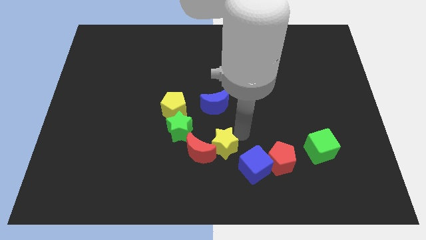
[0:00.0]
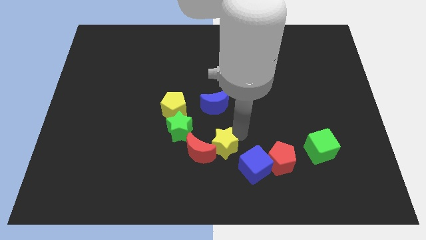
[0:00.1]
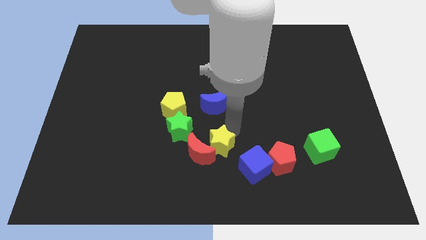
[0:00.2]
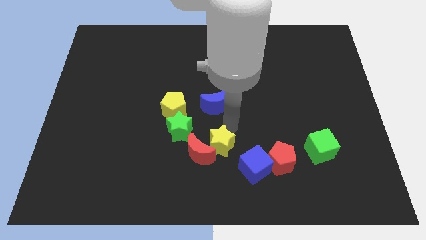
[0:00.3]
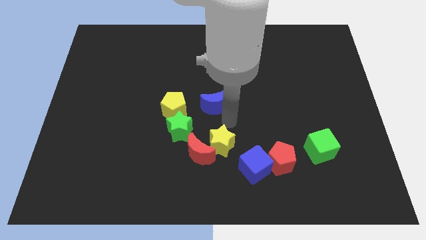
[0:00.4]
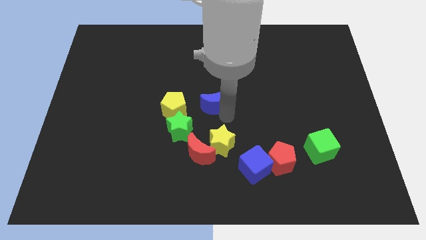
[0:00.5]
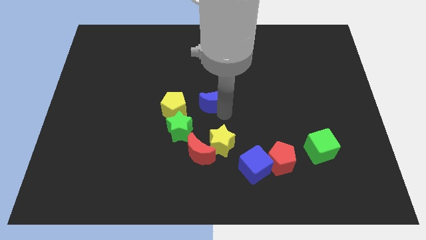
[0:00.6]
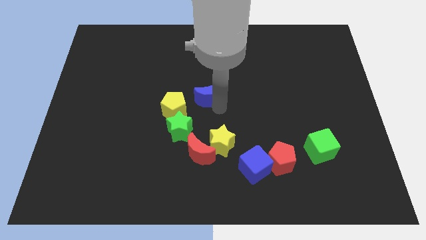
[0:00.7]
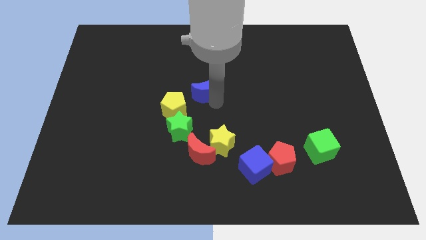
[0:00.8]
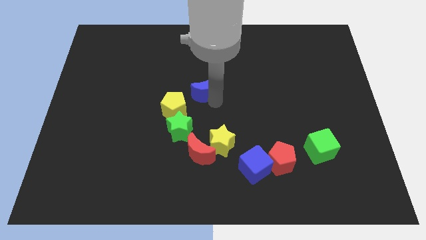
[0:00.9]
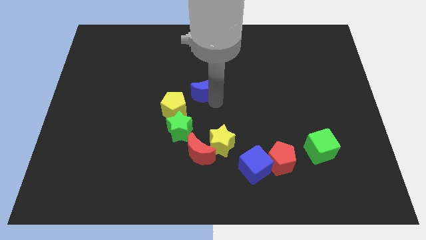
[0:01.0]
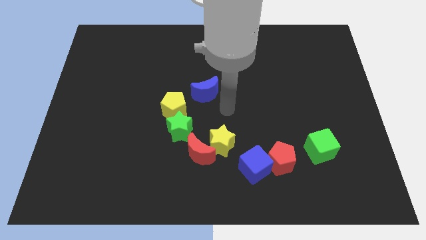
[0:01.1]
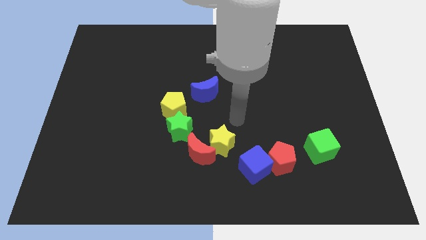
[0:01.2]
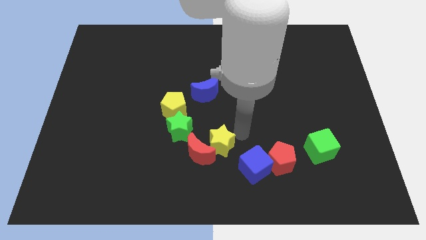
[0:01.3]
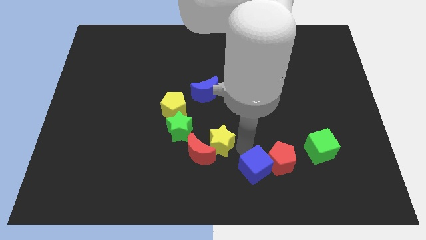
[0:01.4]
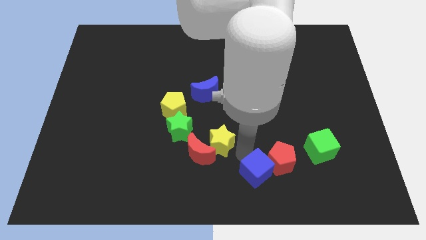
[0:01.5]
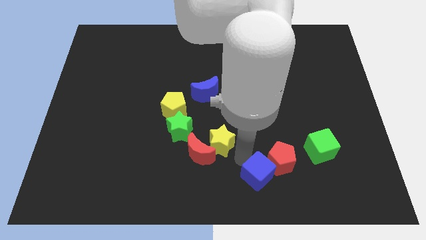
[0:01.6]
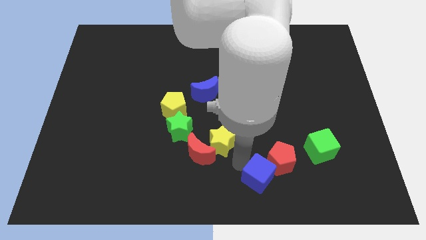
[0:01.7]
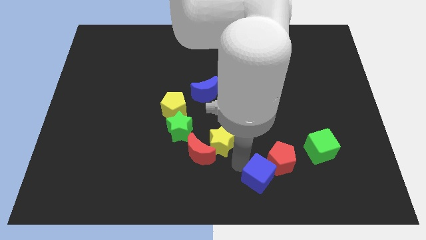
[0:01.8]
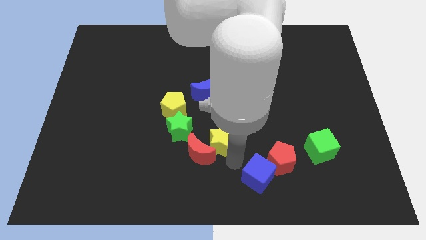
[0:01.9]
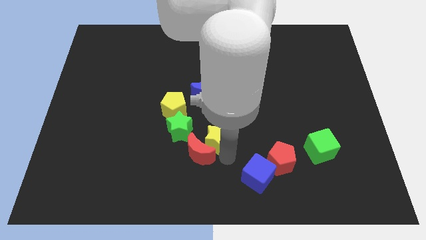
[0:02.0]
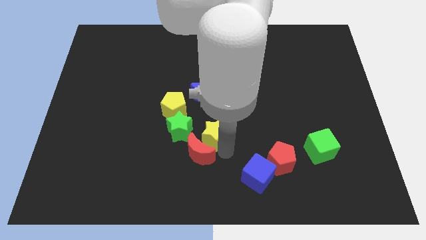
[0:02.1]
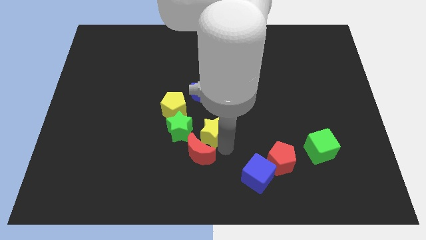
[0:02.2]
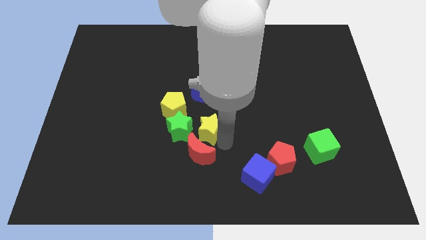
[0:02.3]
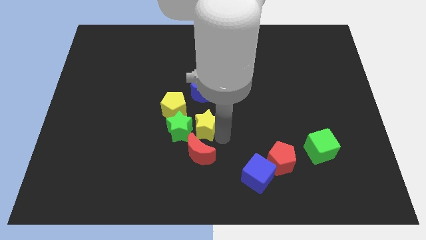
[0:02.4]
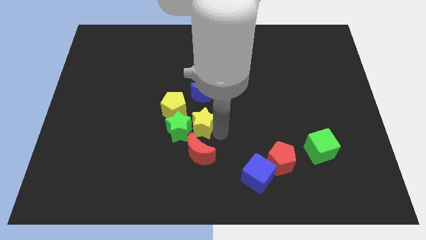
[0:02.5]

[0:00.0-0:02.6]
slightly move the blue moon up

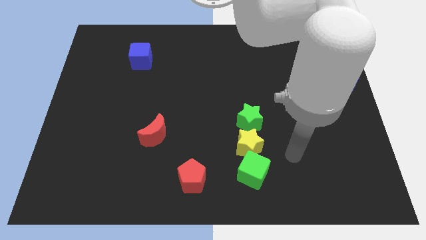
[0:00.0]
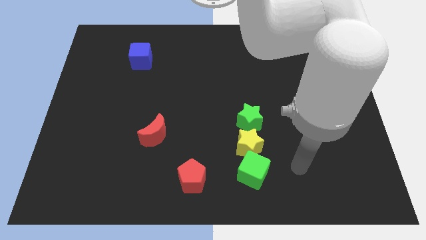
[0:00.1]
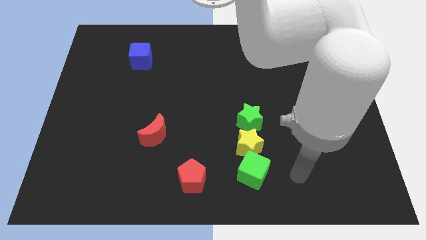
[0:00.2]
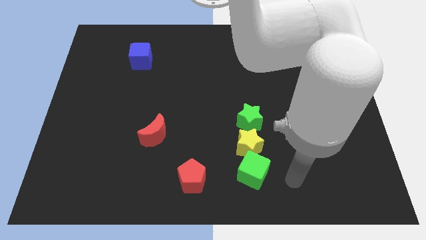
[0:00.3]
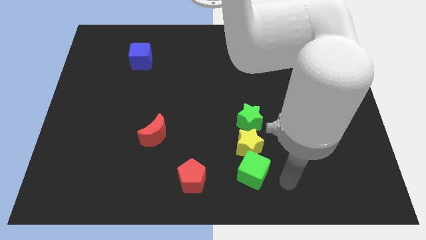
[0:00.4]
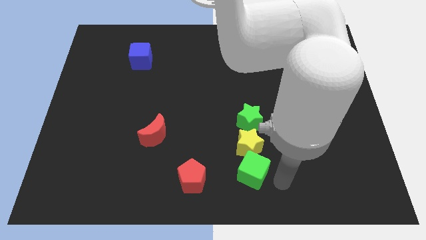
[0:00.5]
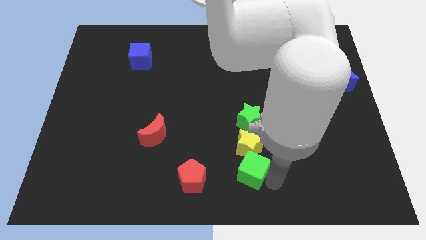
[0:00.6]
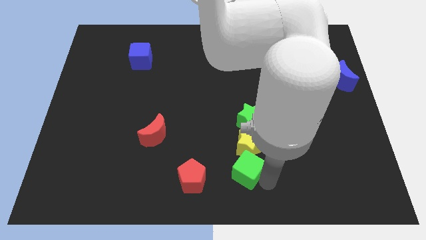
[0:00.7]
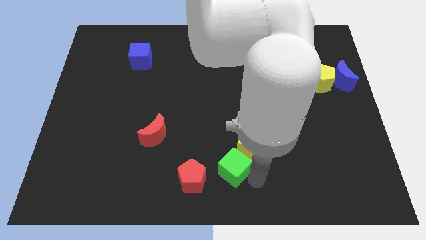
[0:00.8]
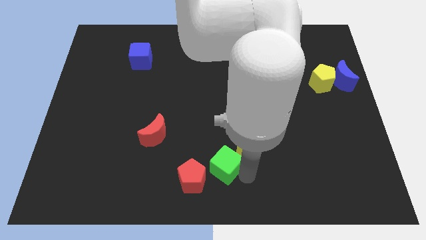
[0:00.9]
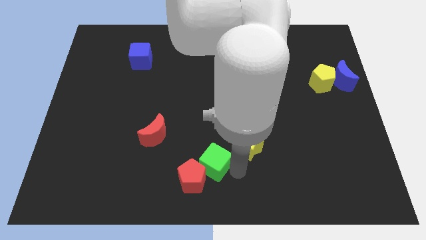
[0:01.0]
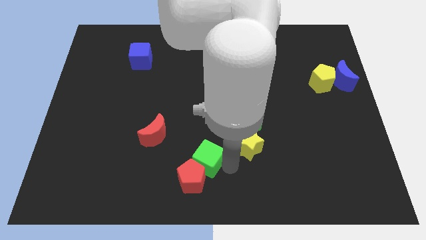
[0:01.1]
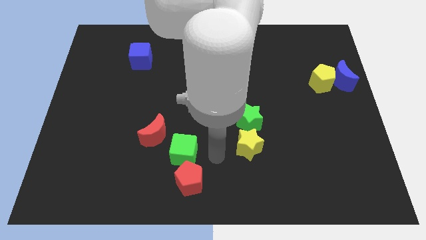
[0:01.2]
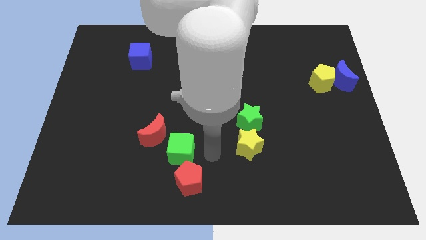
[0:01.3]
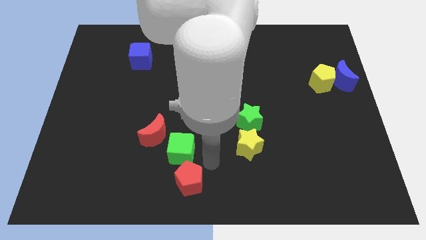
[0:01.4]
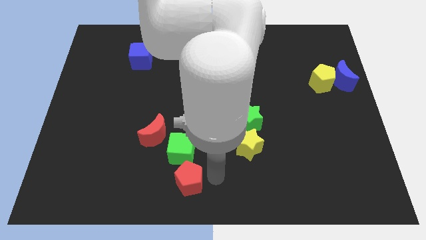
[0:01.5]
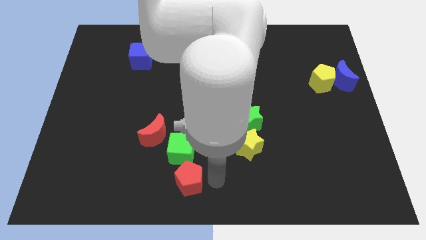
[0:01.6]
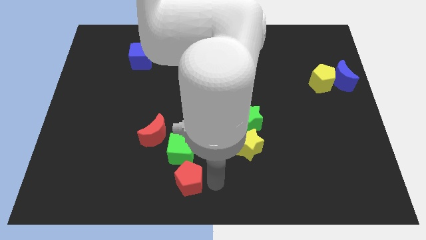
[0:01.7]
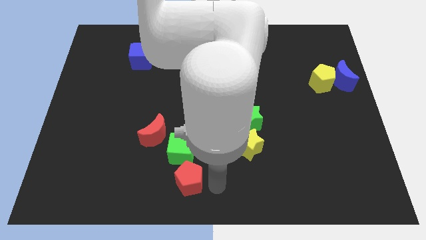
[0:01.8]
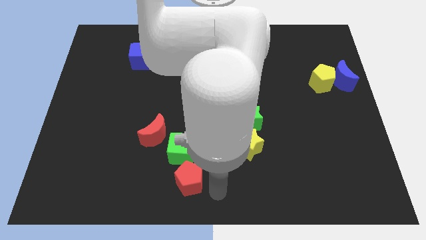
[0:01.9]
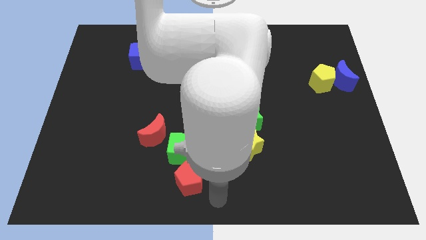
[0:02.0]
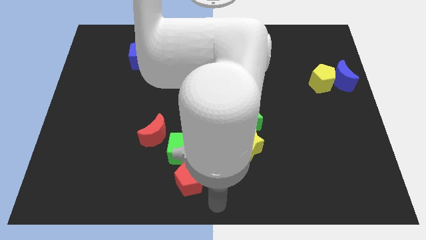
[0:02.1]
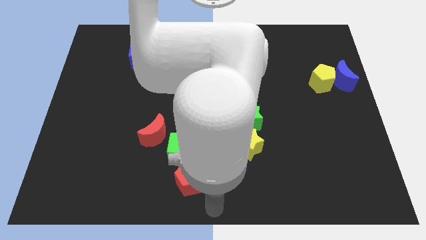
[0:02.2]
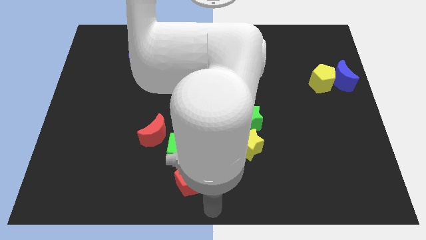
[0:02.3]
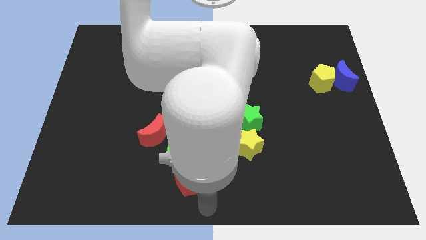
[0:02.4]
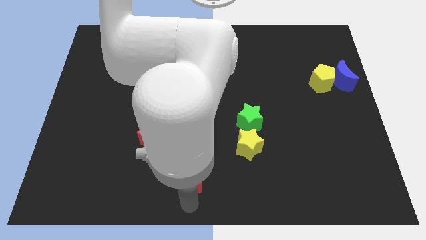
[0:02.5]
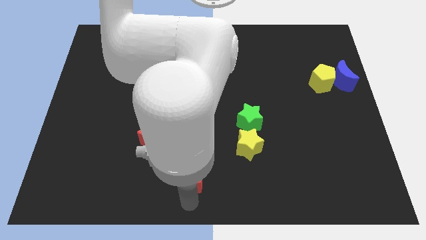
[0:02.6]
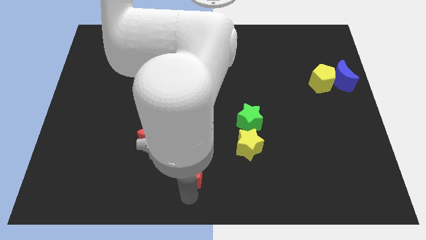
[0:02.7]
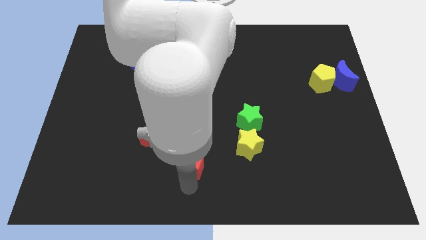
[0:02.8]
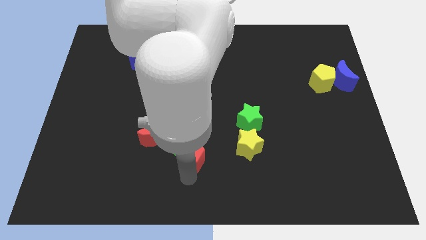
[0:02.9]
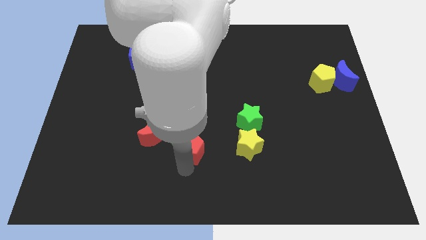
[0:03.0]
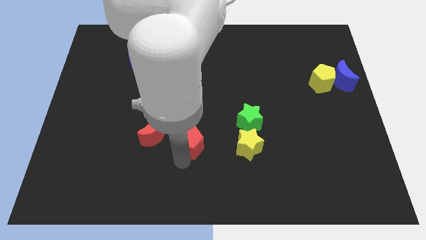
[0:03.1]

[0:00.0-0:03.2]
move the green cube and the red pentagon slightly up

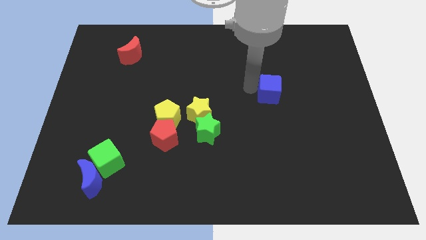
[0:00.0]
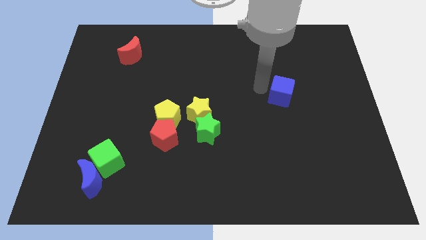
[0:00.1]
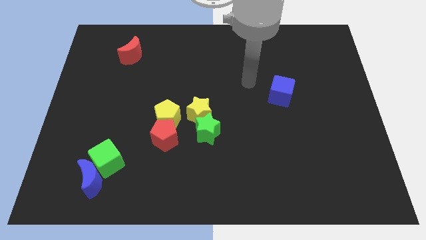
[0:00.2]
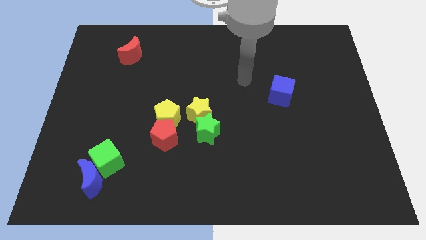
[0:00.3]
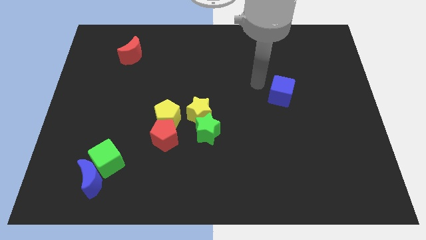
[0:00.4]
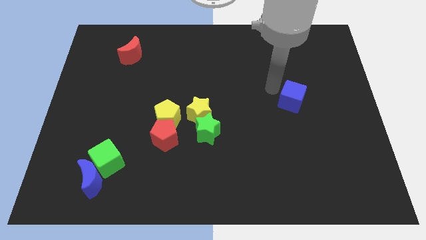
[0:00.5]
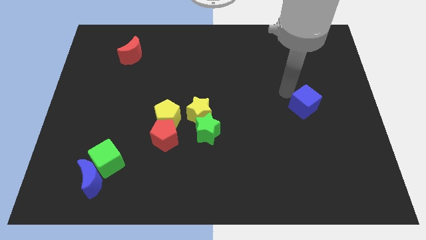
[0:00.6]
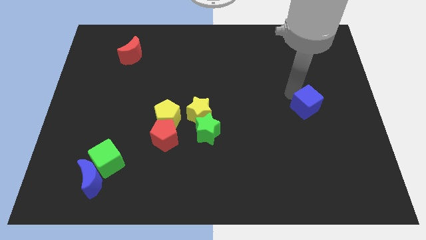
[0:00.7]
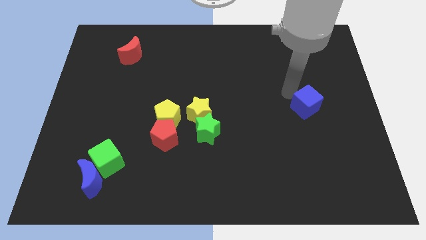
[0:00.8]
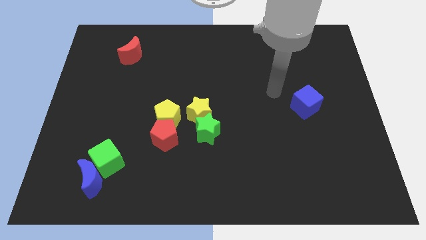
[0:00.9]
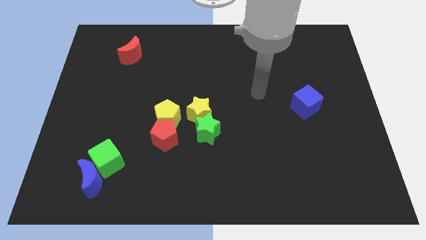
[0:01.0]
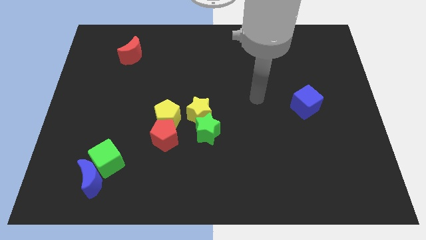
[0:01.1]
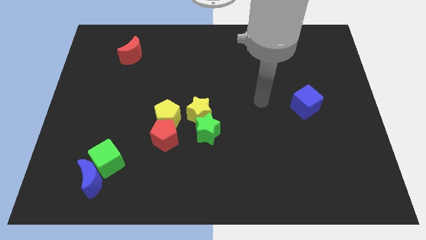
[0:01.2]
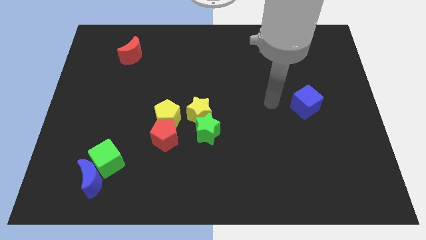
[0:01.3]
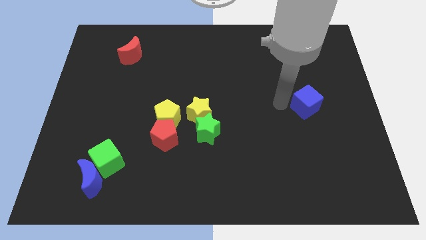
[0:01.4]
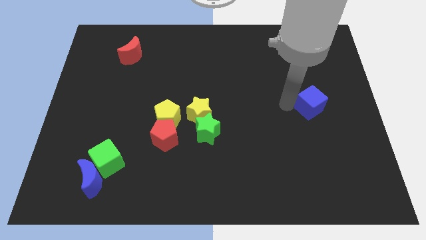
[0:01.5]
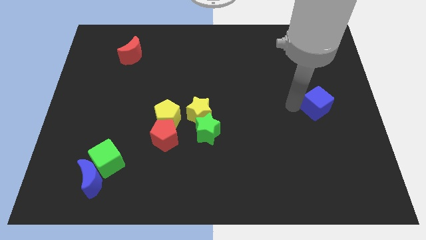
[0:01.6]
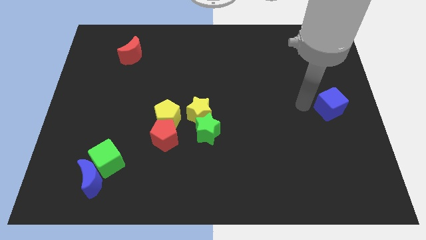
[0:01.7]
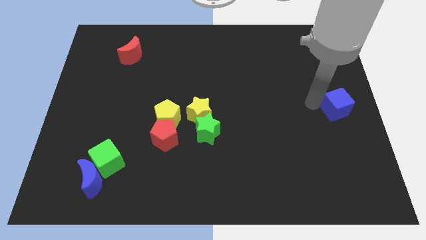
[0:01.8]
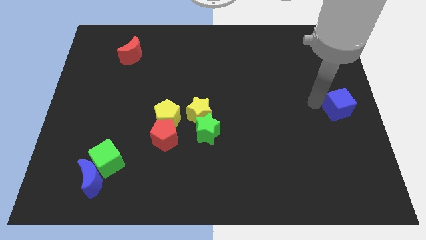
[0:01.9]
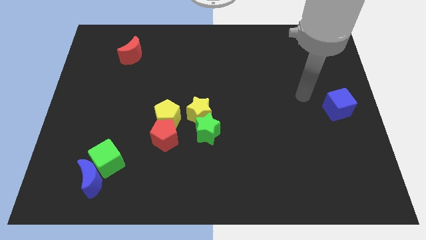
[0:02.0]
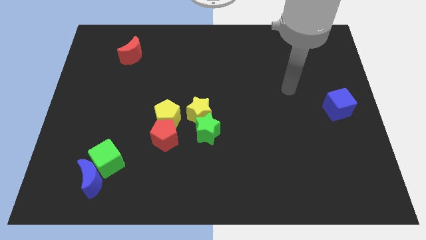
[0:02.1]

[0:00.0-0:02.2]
push the blue cube towards the right center of the board

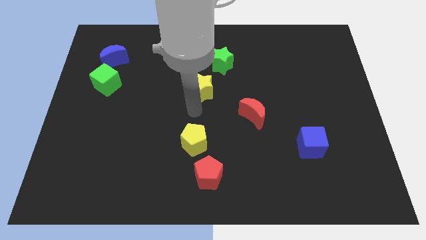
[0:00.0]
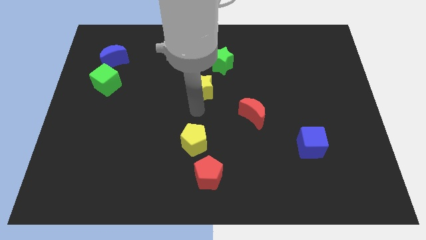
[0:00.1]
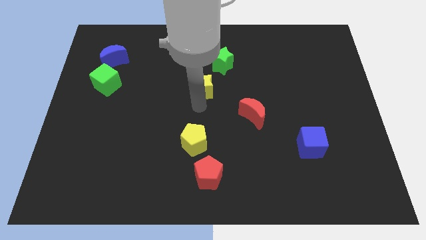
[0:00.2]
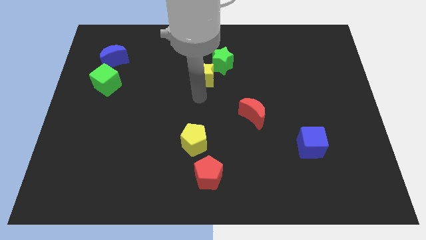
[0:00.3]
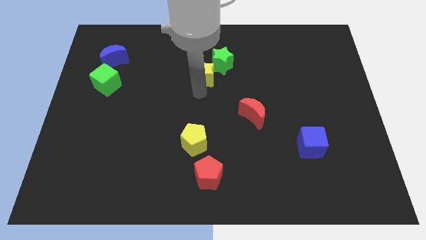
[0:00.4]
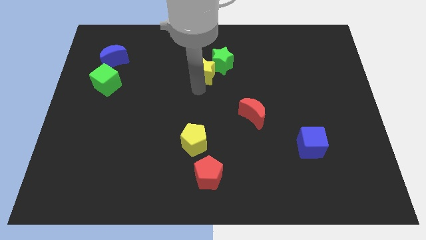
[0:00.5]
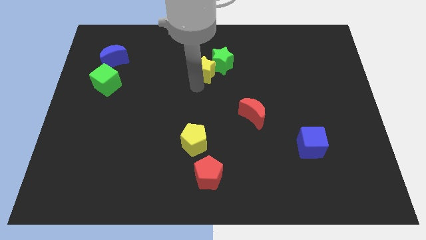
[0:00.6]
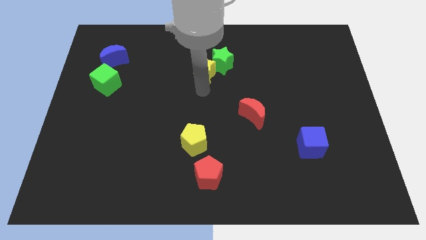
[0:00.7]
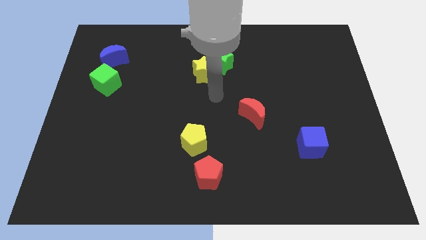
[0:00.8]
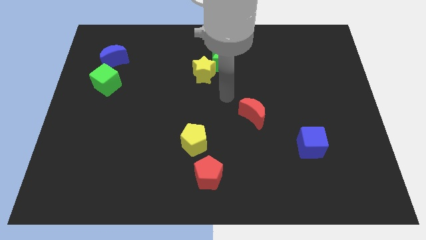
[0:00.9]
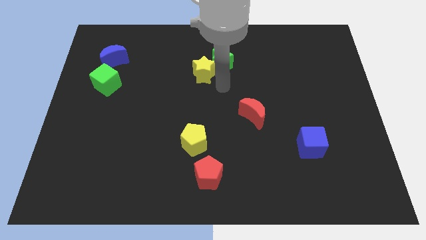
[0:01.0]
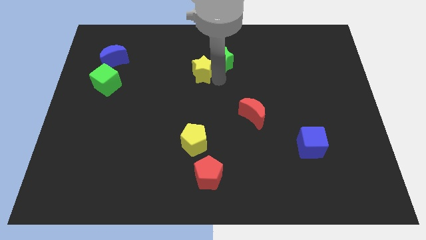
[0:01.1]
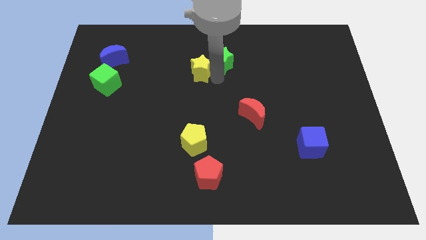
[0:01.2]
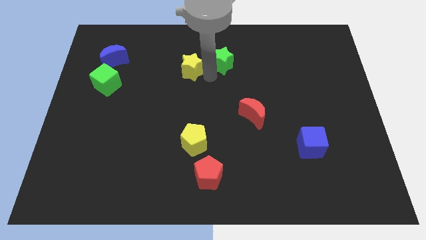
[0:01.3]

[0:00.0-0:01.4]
place the yellow star left to the green star
